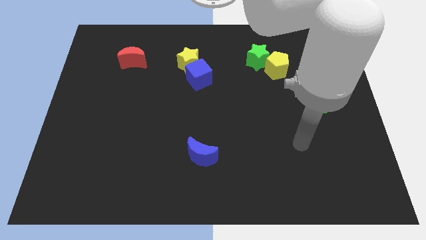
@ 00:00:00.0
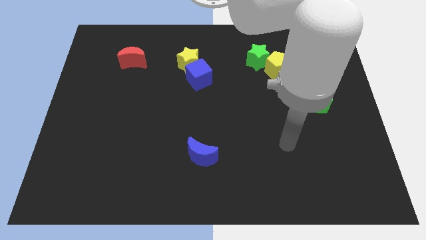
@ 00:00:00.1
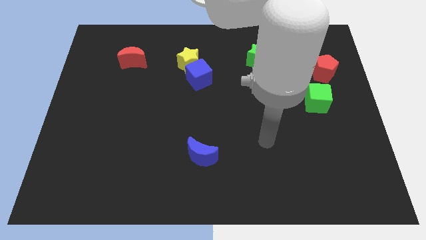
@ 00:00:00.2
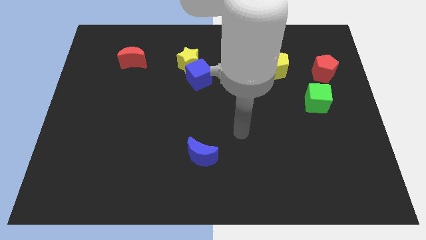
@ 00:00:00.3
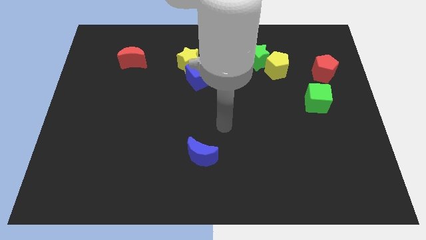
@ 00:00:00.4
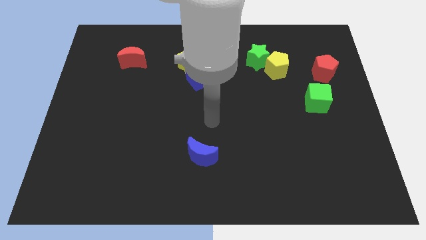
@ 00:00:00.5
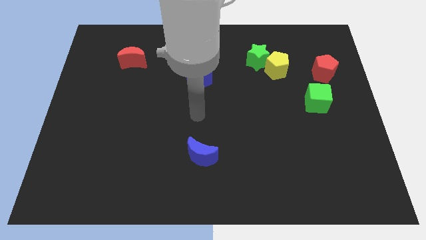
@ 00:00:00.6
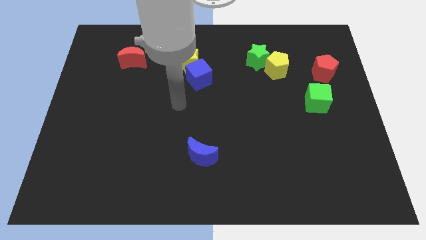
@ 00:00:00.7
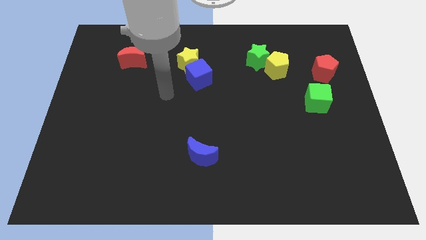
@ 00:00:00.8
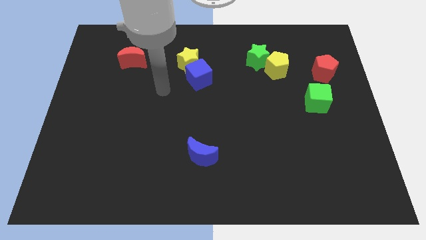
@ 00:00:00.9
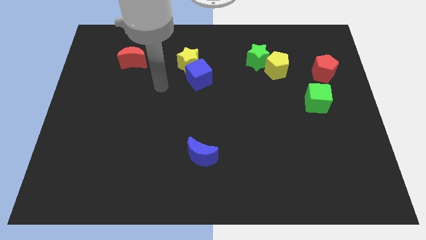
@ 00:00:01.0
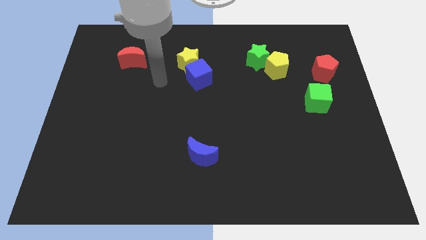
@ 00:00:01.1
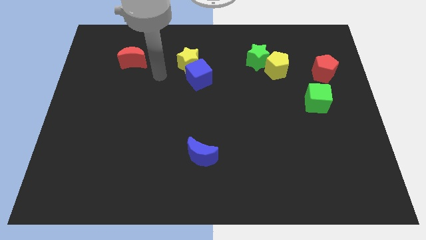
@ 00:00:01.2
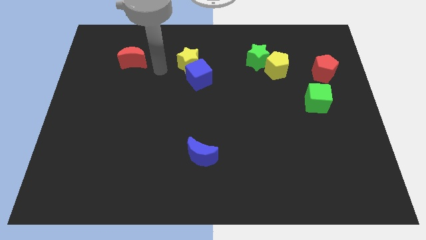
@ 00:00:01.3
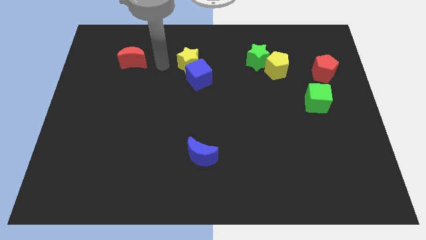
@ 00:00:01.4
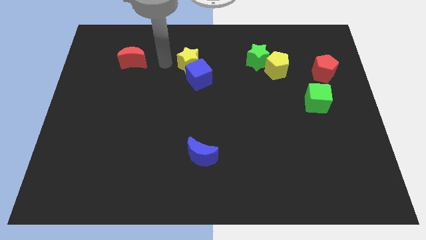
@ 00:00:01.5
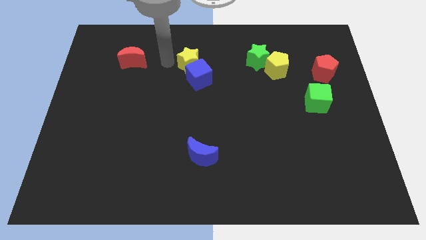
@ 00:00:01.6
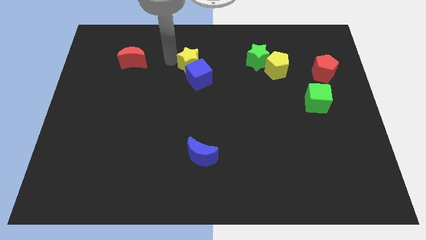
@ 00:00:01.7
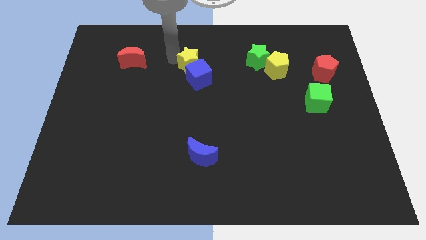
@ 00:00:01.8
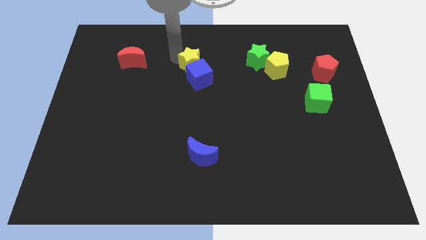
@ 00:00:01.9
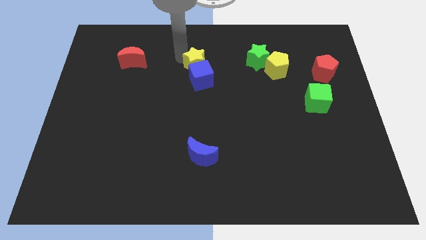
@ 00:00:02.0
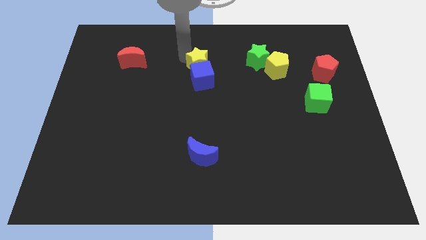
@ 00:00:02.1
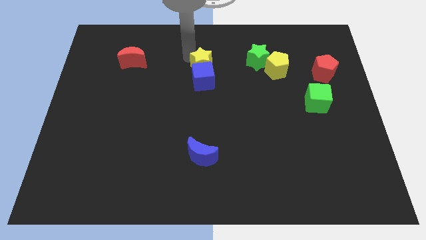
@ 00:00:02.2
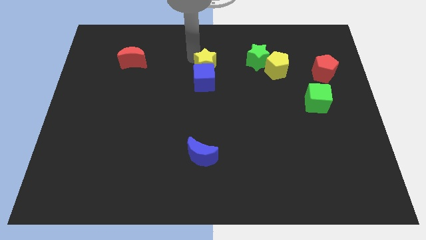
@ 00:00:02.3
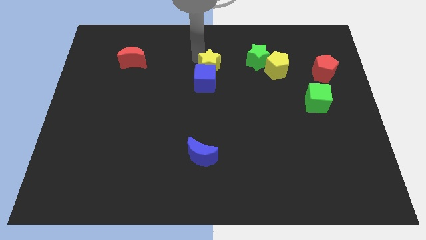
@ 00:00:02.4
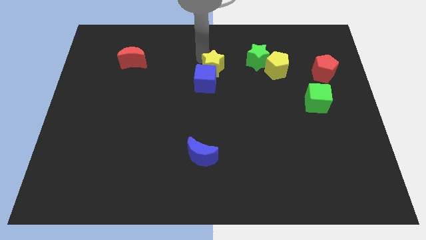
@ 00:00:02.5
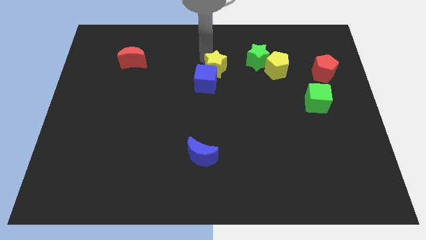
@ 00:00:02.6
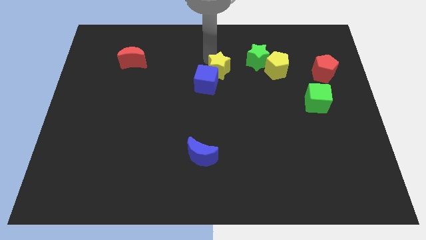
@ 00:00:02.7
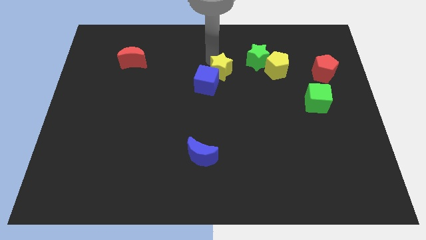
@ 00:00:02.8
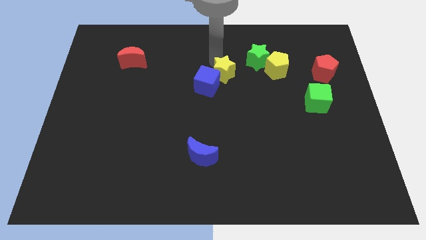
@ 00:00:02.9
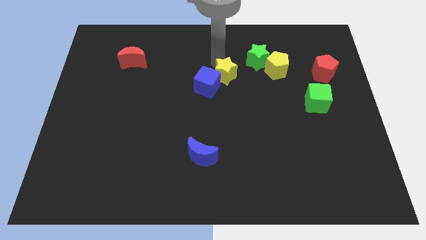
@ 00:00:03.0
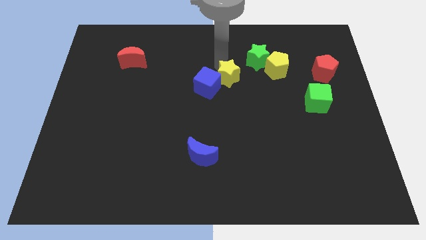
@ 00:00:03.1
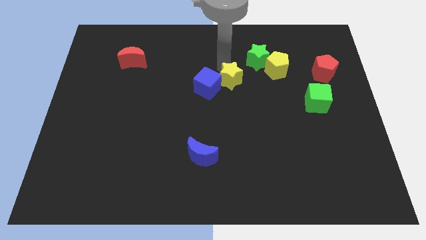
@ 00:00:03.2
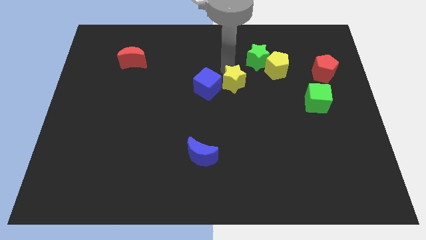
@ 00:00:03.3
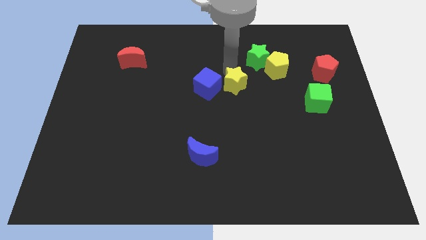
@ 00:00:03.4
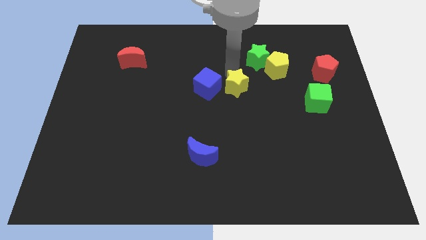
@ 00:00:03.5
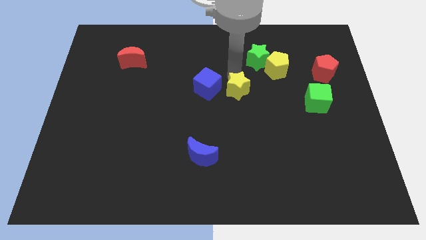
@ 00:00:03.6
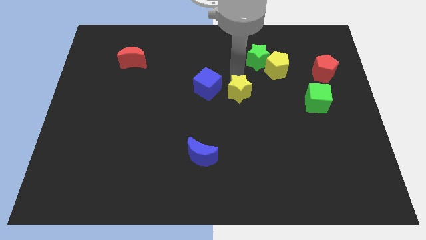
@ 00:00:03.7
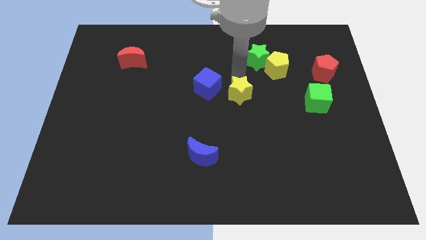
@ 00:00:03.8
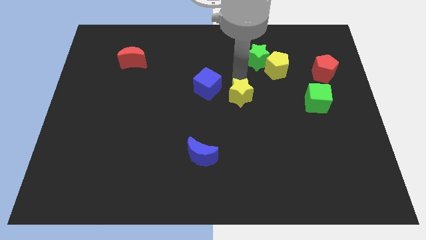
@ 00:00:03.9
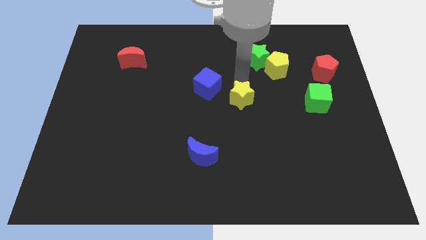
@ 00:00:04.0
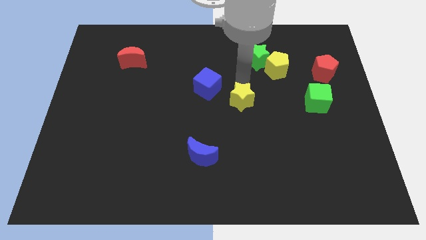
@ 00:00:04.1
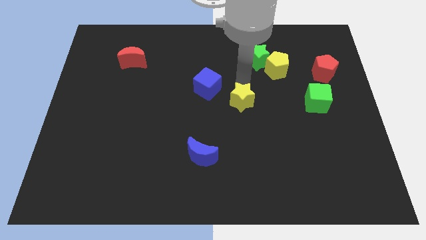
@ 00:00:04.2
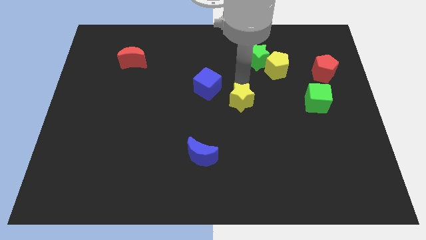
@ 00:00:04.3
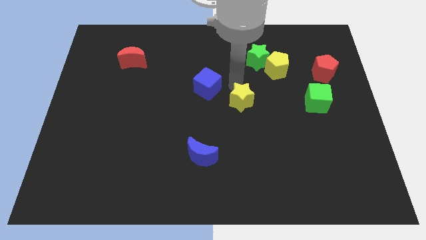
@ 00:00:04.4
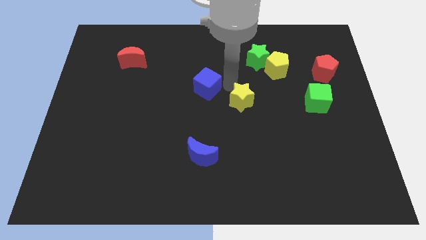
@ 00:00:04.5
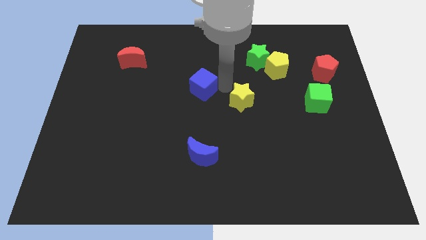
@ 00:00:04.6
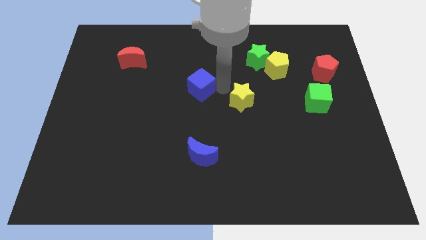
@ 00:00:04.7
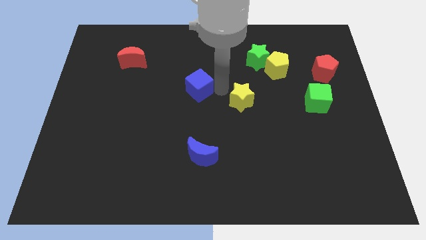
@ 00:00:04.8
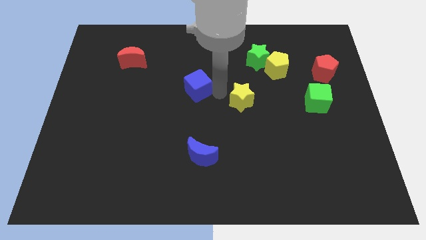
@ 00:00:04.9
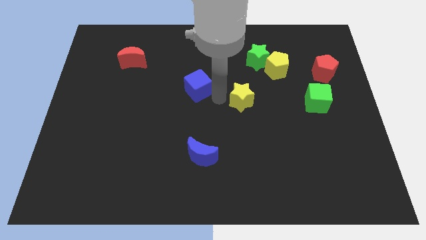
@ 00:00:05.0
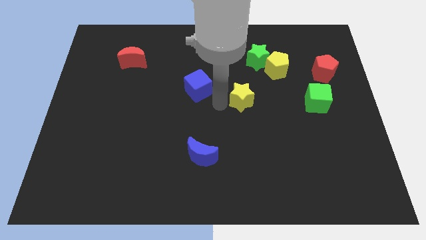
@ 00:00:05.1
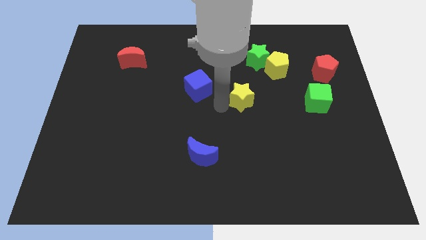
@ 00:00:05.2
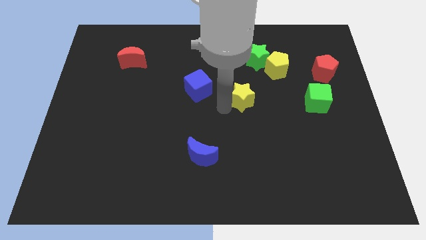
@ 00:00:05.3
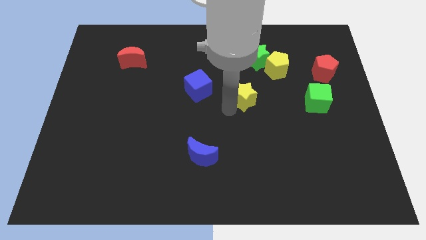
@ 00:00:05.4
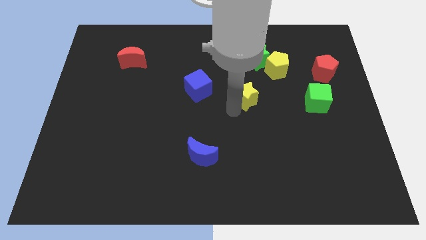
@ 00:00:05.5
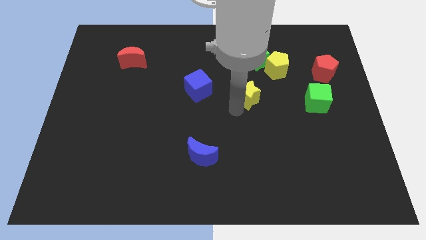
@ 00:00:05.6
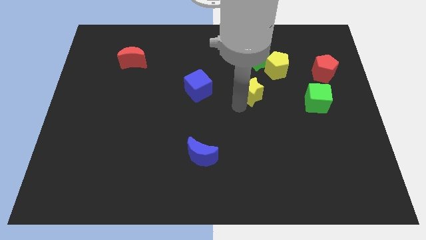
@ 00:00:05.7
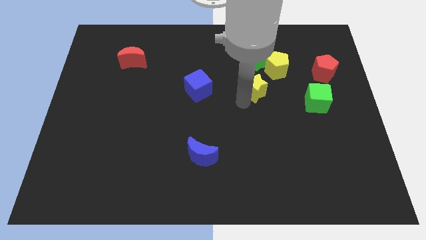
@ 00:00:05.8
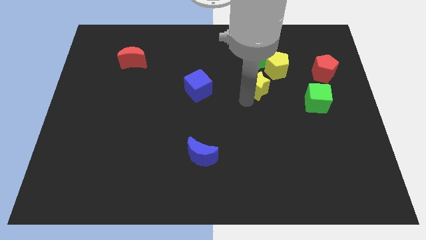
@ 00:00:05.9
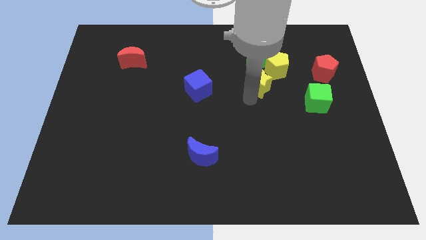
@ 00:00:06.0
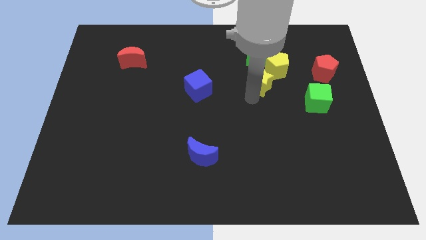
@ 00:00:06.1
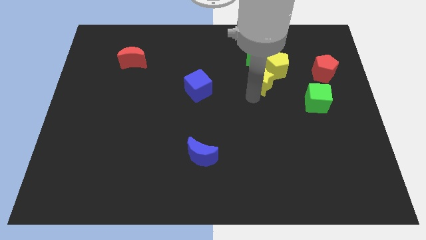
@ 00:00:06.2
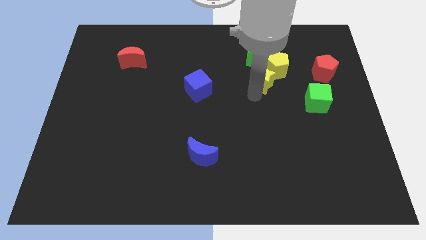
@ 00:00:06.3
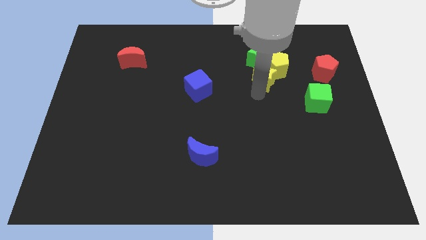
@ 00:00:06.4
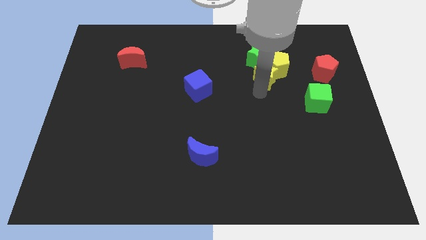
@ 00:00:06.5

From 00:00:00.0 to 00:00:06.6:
move the yellow star close to the yellow pentagon

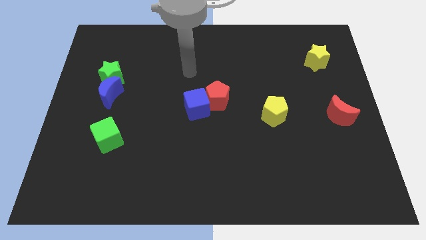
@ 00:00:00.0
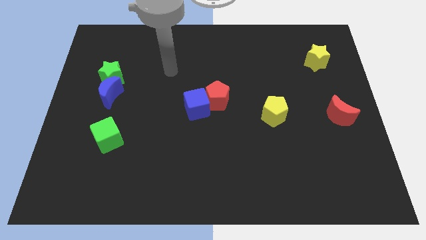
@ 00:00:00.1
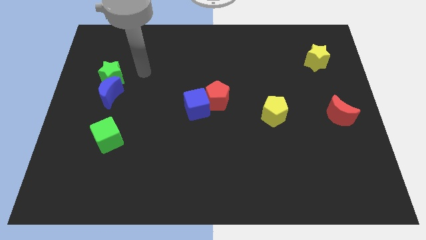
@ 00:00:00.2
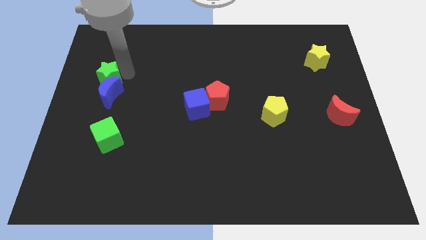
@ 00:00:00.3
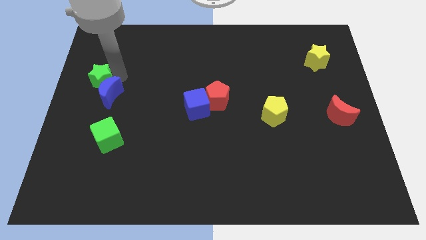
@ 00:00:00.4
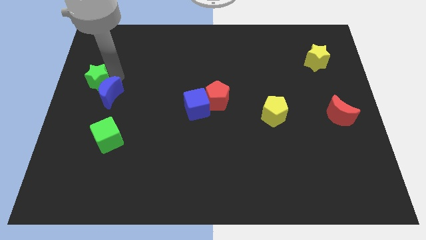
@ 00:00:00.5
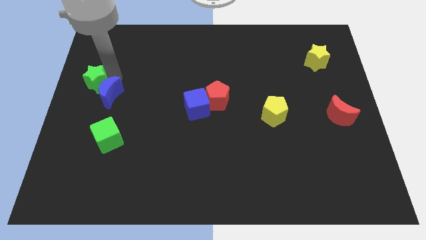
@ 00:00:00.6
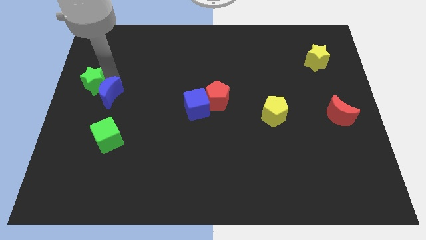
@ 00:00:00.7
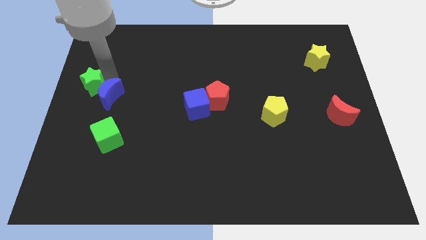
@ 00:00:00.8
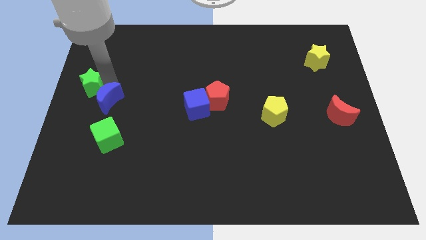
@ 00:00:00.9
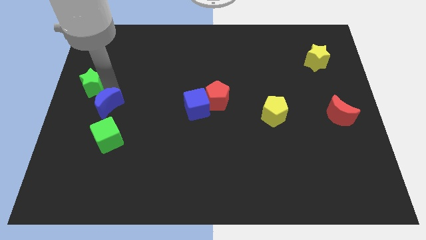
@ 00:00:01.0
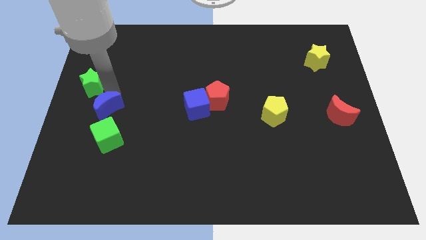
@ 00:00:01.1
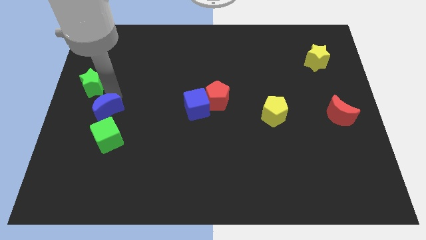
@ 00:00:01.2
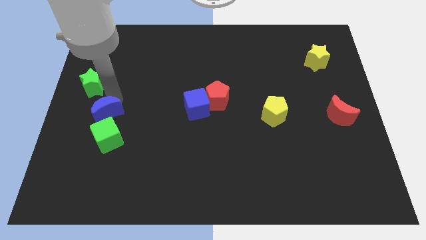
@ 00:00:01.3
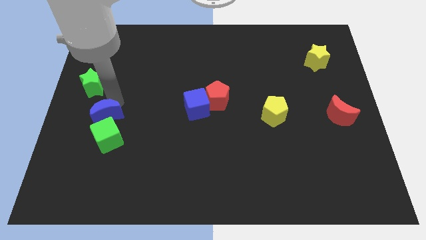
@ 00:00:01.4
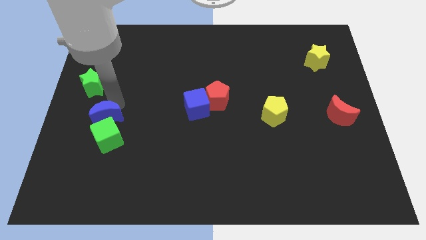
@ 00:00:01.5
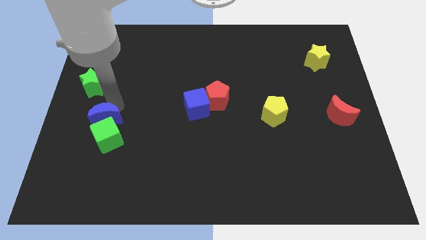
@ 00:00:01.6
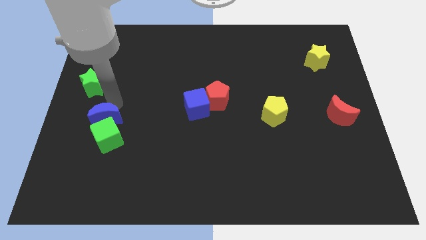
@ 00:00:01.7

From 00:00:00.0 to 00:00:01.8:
push the blue moon close to the green cube

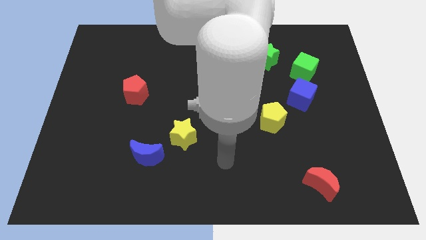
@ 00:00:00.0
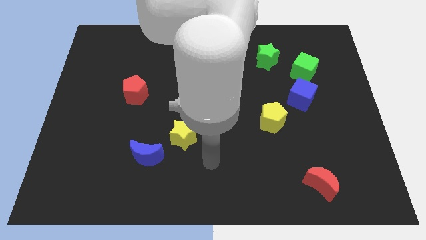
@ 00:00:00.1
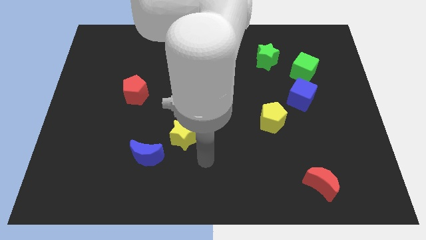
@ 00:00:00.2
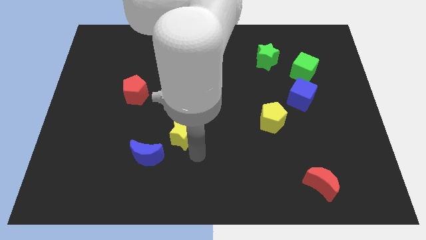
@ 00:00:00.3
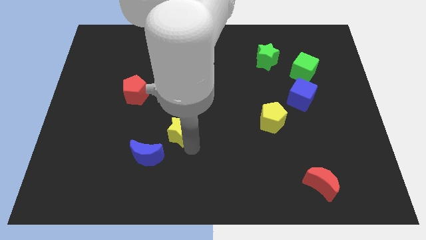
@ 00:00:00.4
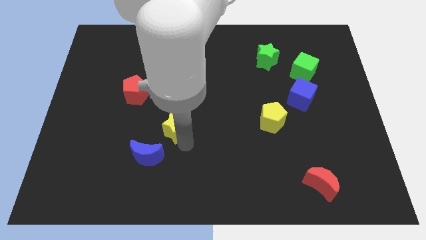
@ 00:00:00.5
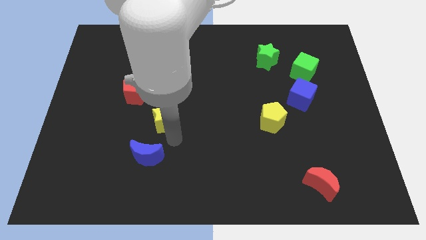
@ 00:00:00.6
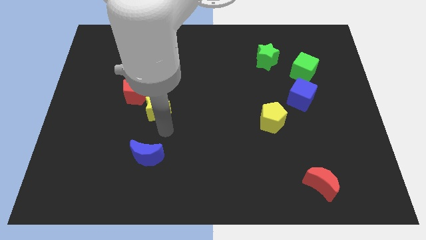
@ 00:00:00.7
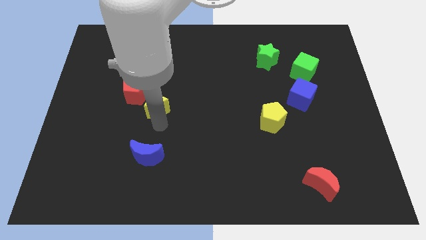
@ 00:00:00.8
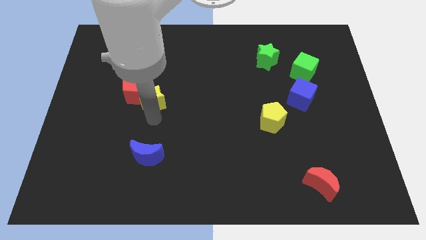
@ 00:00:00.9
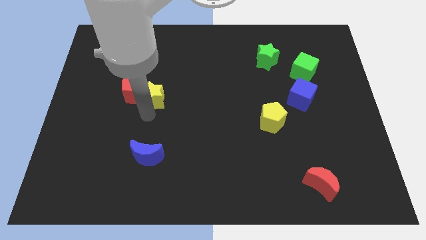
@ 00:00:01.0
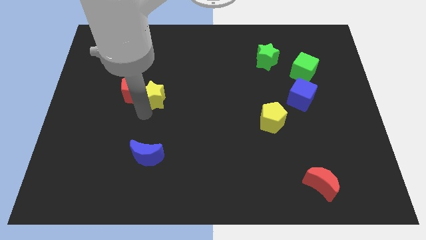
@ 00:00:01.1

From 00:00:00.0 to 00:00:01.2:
move the yellow star towards the red pentagon
